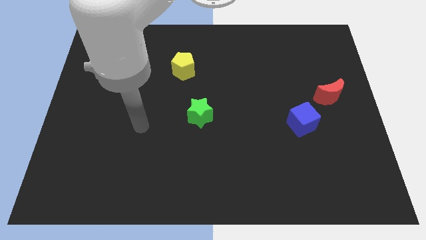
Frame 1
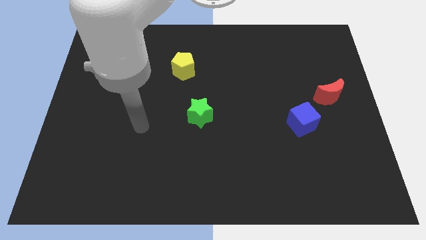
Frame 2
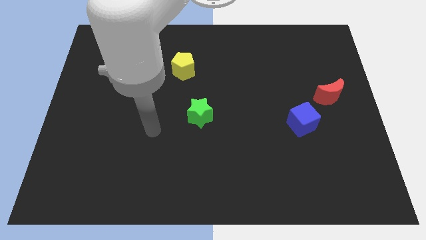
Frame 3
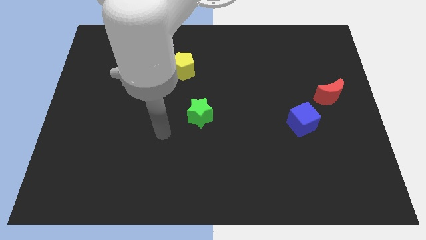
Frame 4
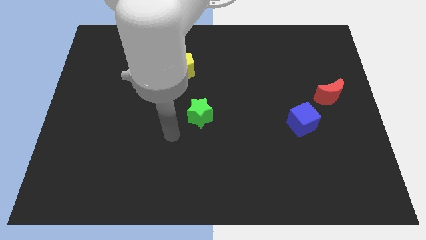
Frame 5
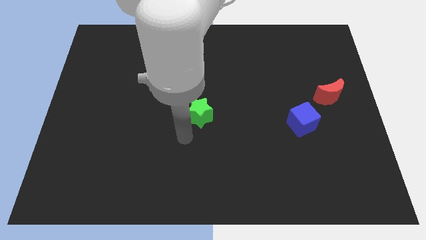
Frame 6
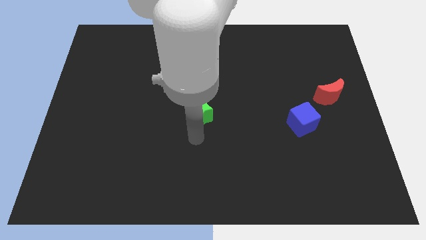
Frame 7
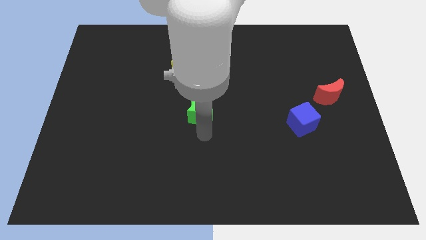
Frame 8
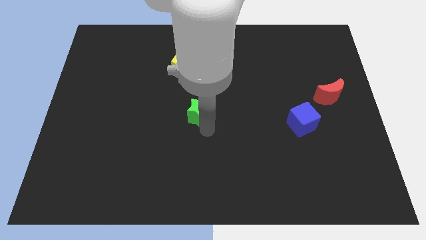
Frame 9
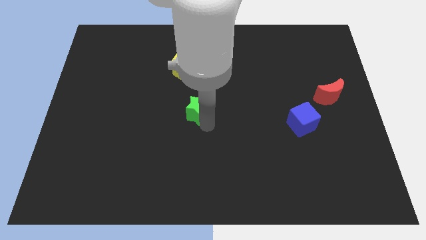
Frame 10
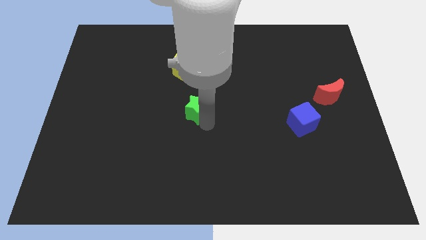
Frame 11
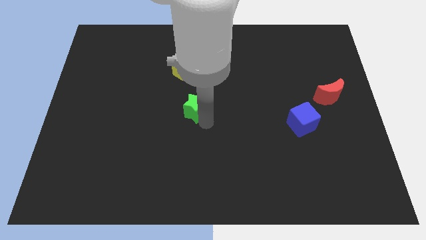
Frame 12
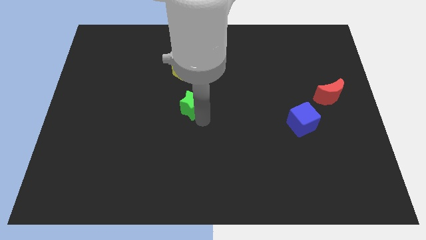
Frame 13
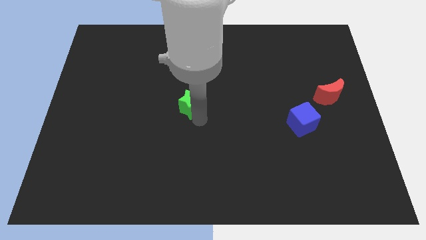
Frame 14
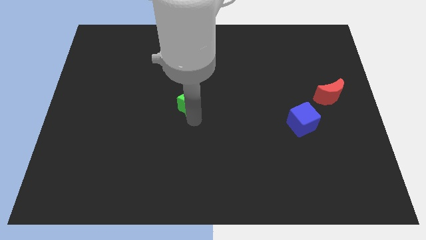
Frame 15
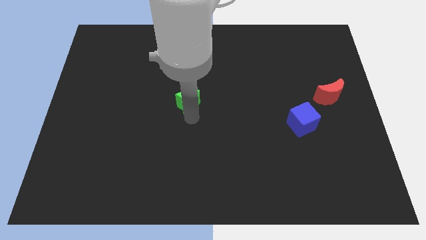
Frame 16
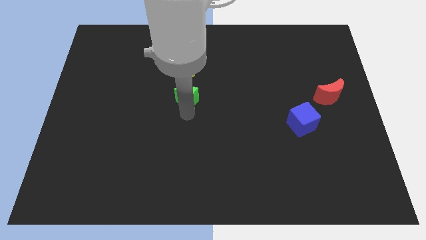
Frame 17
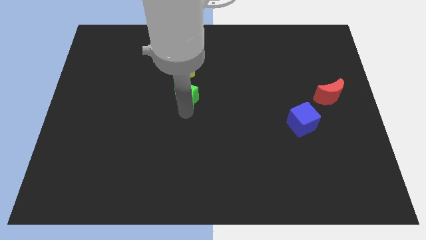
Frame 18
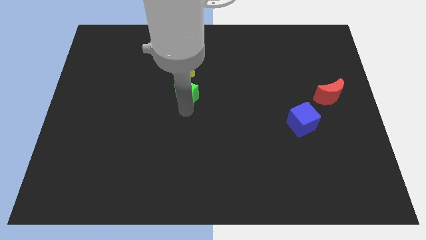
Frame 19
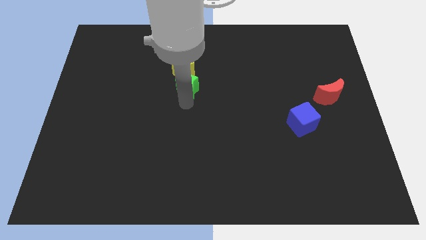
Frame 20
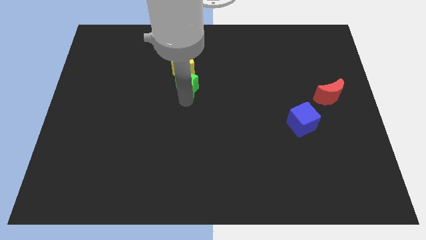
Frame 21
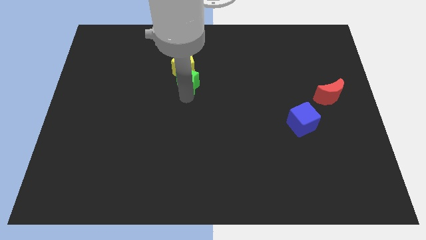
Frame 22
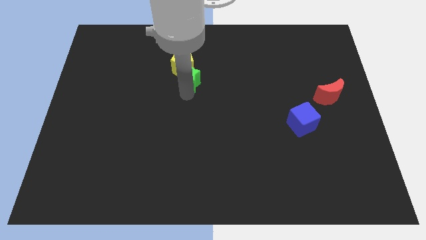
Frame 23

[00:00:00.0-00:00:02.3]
slide the green block towards the yellow pentagon

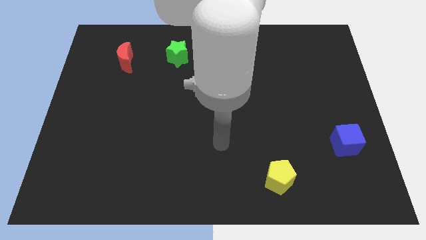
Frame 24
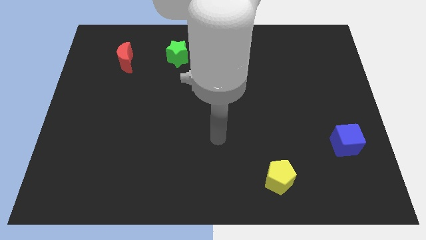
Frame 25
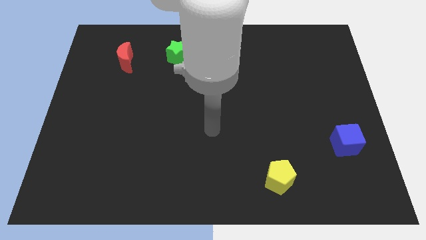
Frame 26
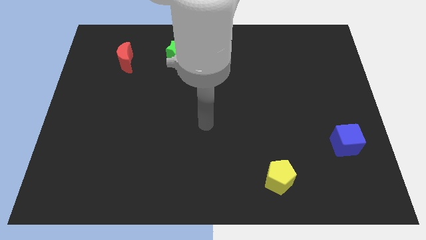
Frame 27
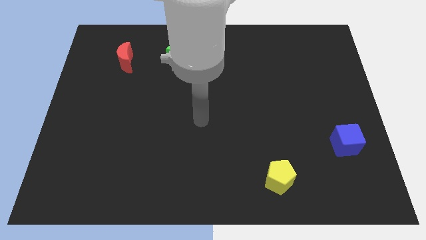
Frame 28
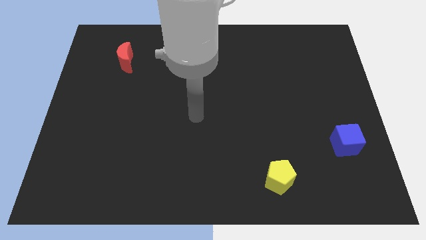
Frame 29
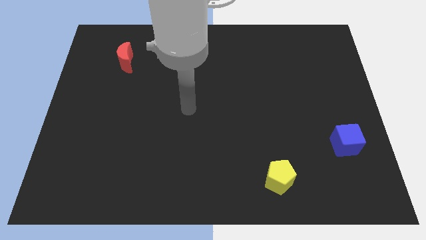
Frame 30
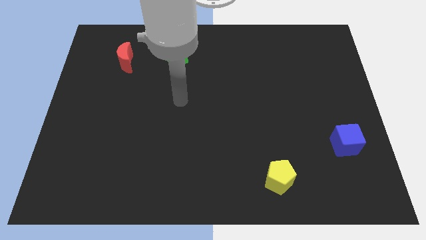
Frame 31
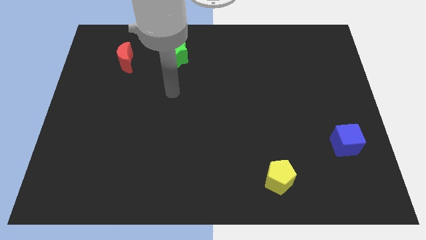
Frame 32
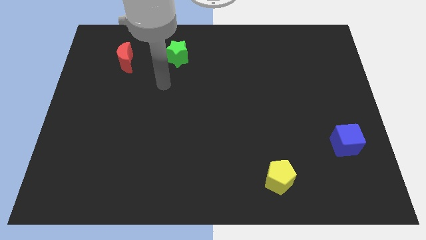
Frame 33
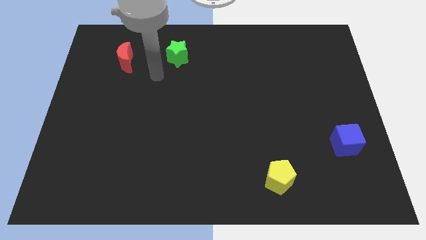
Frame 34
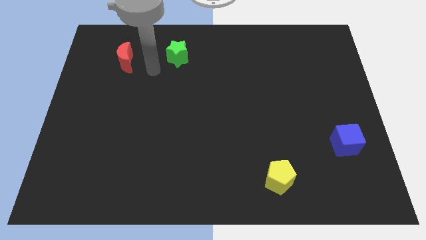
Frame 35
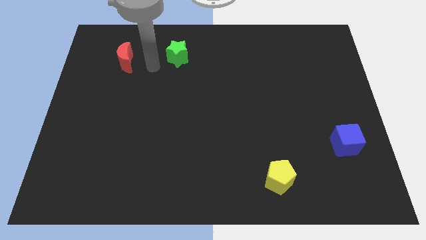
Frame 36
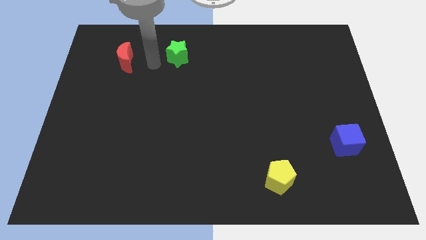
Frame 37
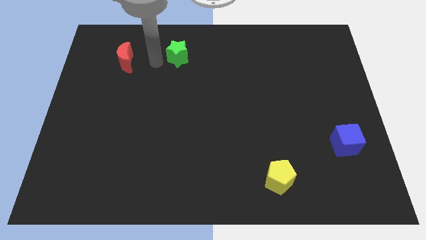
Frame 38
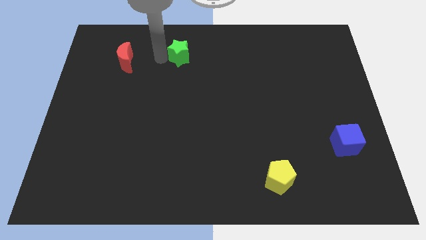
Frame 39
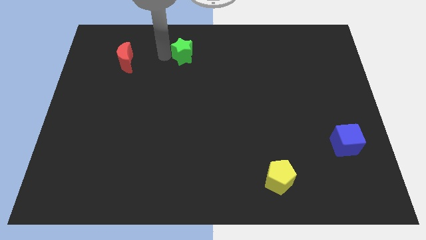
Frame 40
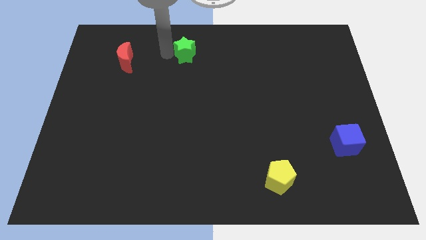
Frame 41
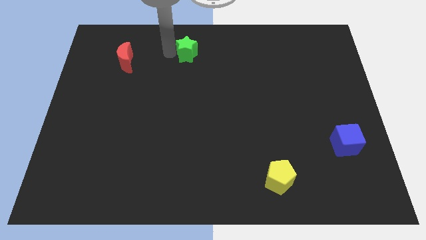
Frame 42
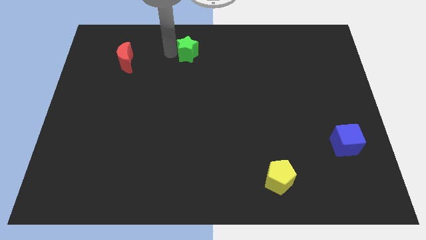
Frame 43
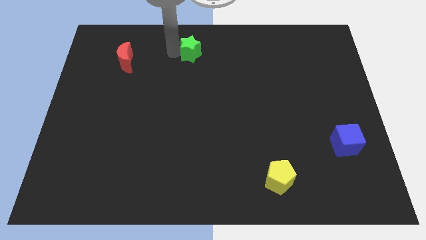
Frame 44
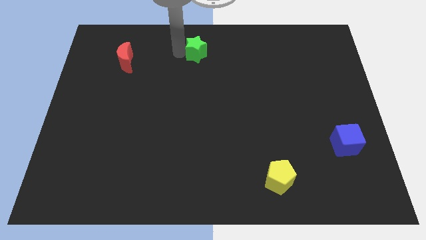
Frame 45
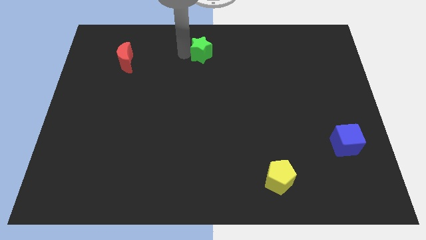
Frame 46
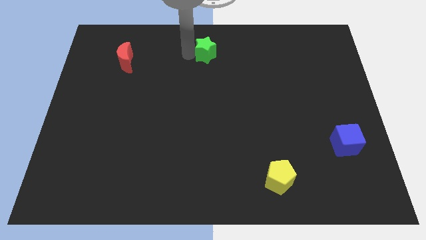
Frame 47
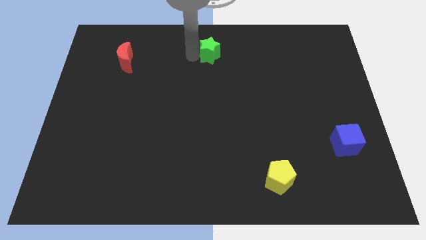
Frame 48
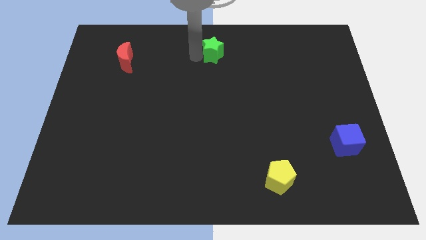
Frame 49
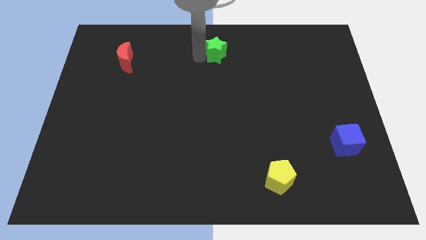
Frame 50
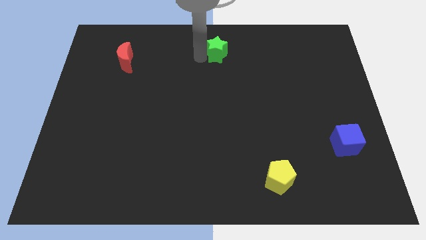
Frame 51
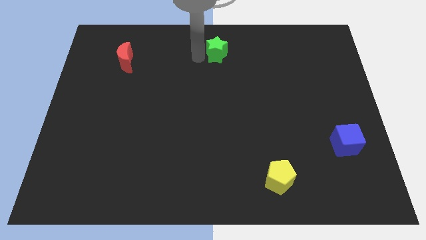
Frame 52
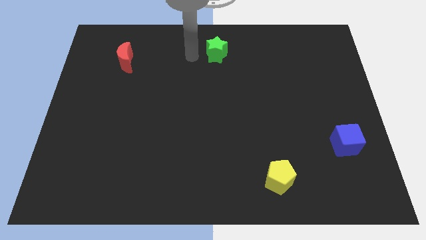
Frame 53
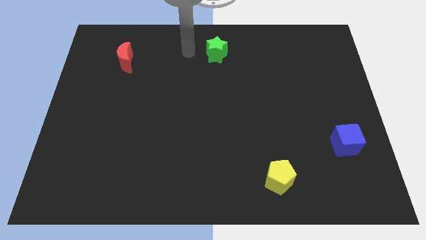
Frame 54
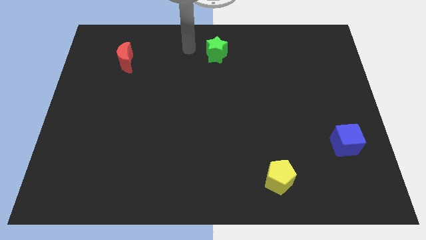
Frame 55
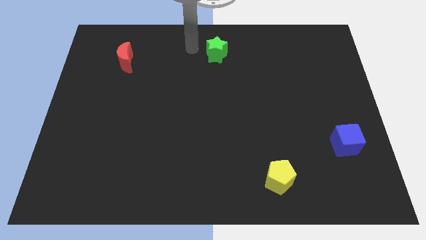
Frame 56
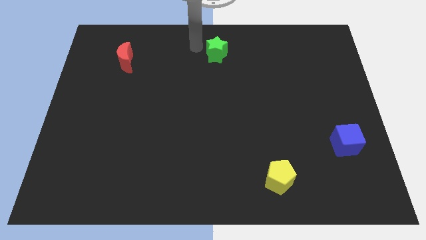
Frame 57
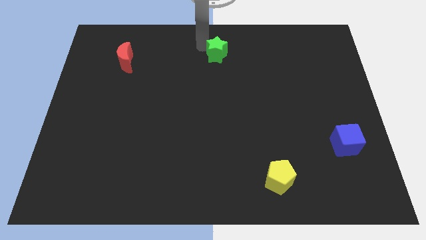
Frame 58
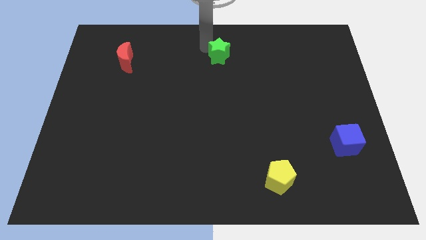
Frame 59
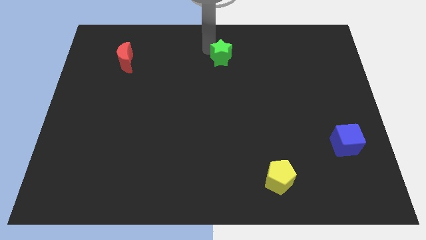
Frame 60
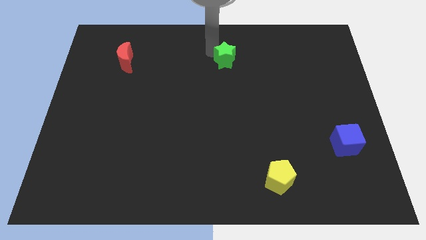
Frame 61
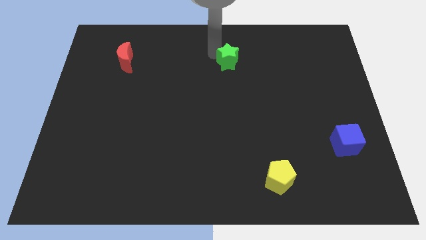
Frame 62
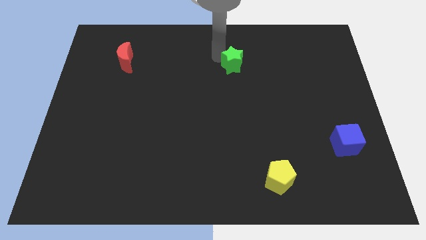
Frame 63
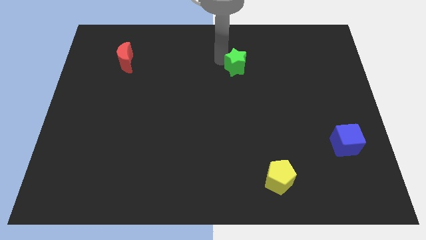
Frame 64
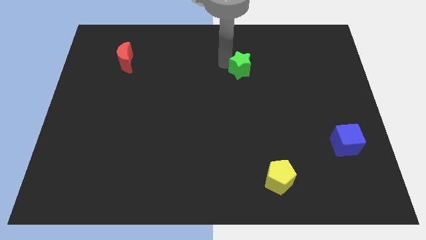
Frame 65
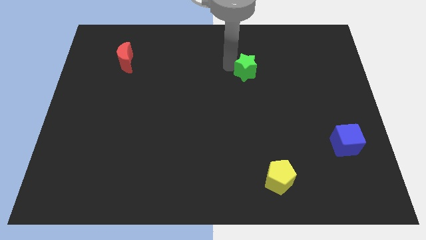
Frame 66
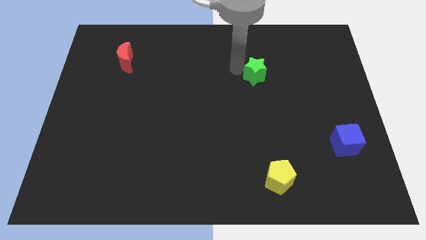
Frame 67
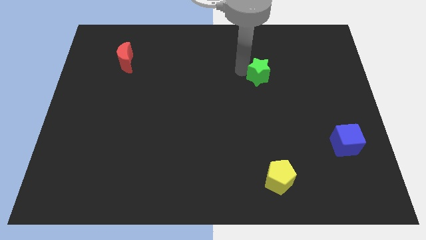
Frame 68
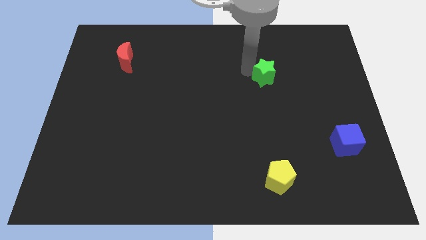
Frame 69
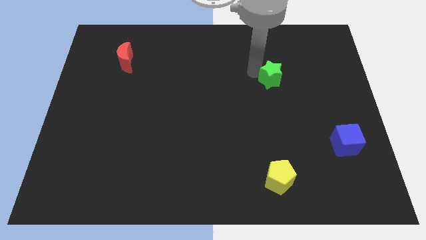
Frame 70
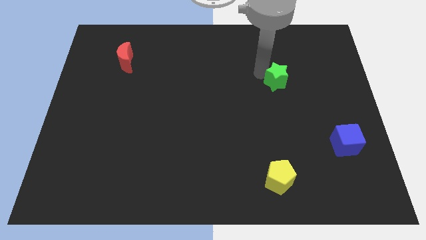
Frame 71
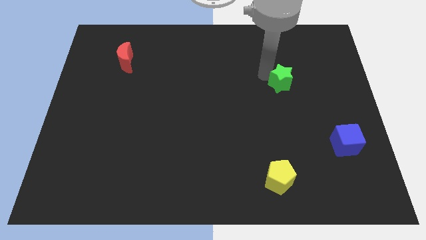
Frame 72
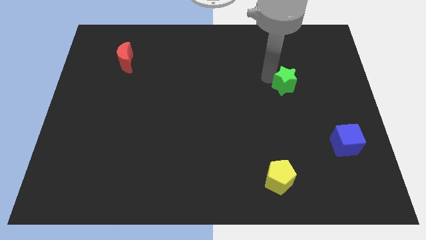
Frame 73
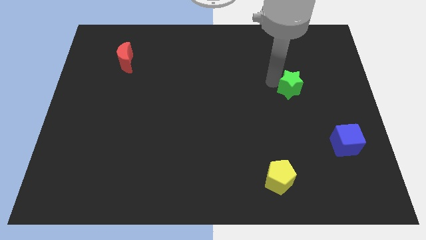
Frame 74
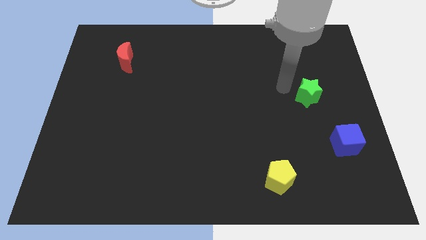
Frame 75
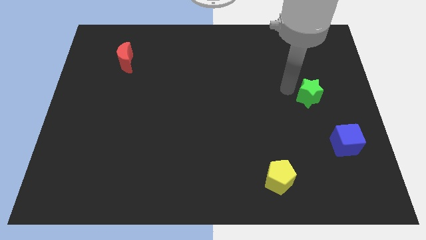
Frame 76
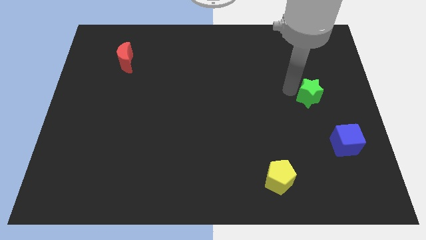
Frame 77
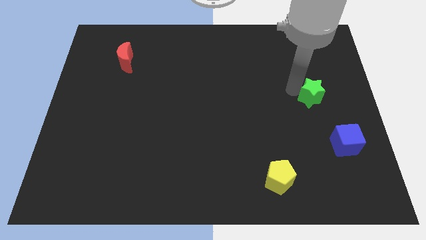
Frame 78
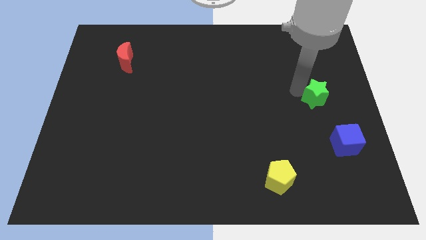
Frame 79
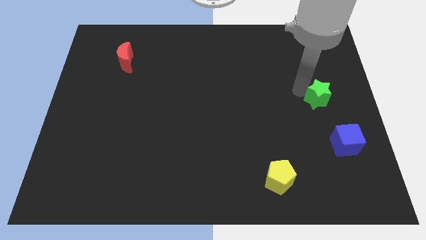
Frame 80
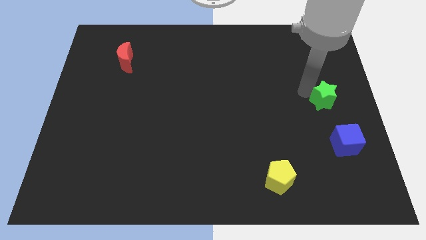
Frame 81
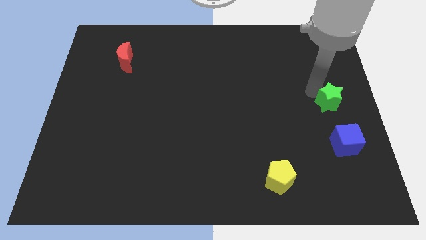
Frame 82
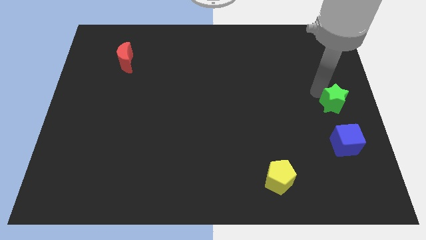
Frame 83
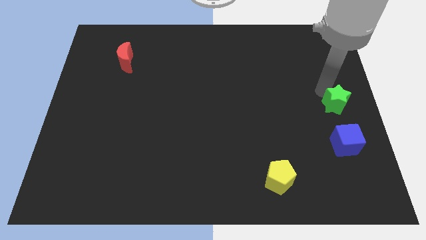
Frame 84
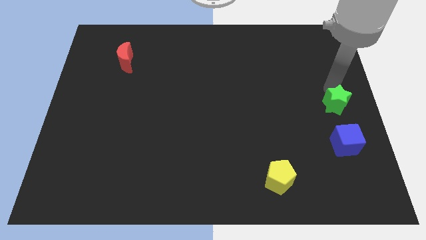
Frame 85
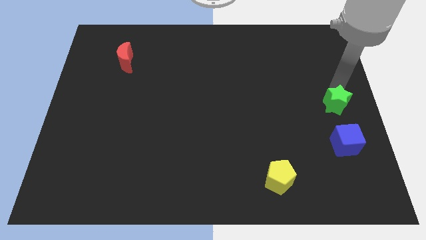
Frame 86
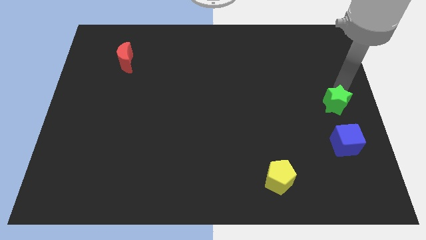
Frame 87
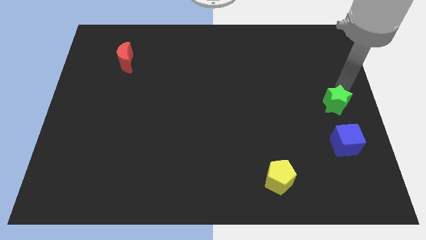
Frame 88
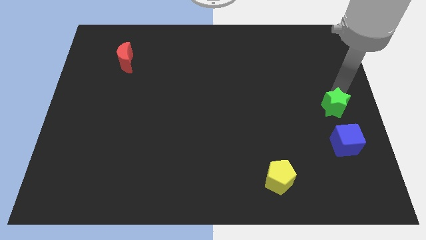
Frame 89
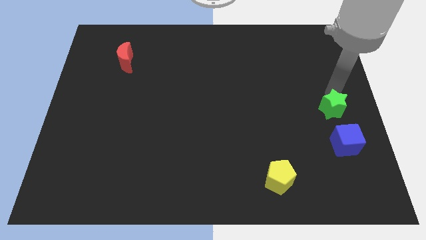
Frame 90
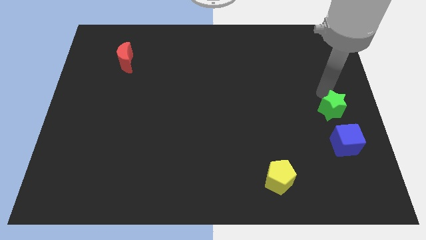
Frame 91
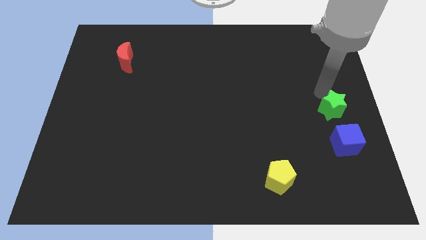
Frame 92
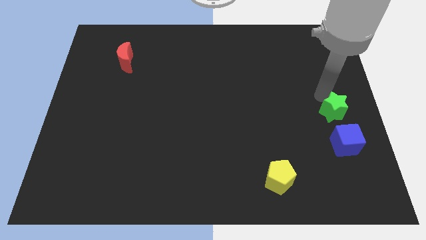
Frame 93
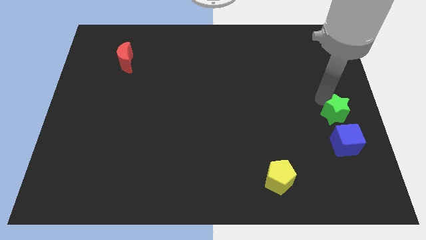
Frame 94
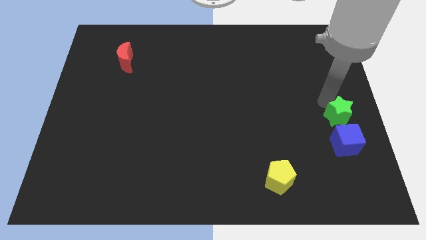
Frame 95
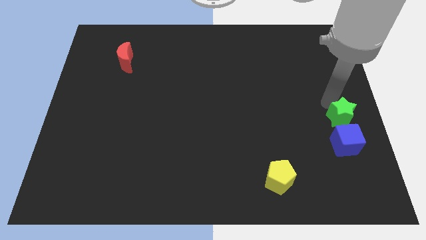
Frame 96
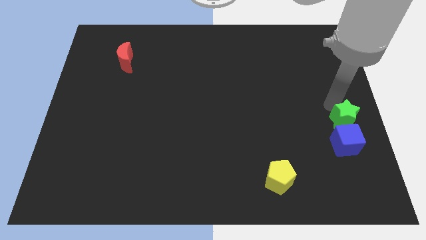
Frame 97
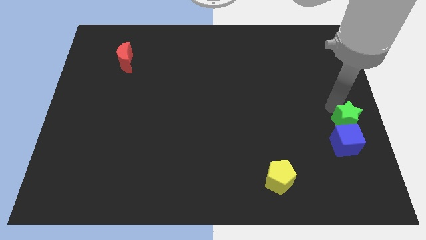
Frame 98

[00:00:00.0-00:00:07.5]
put the green star next to the blue block
